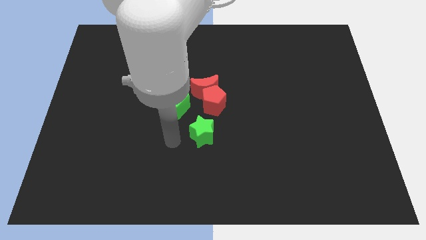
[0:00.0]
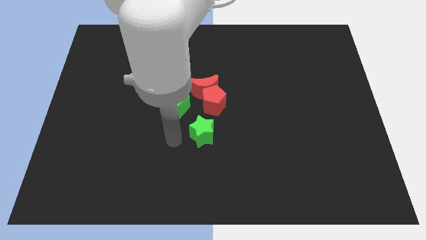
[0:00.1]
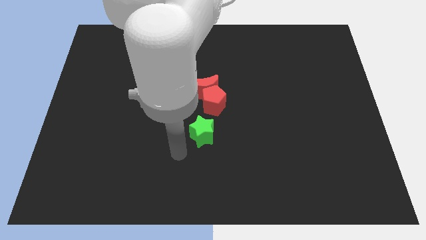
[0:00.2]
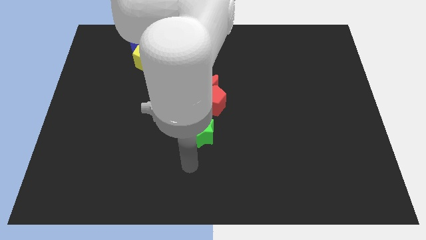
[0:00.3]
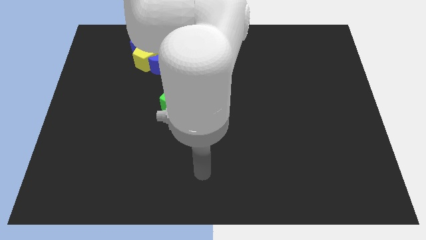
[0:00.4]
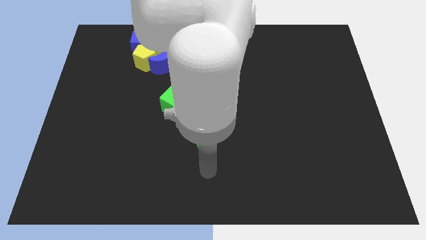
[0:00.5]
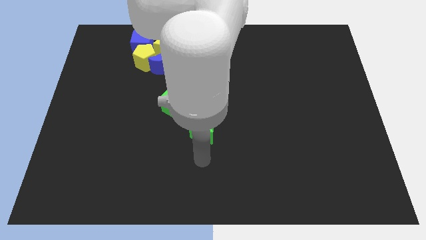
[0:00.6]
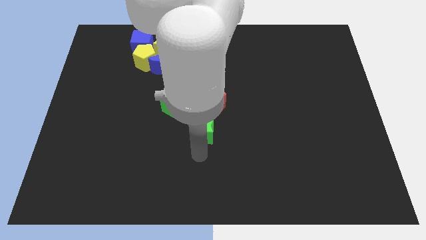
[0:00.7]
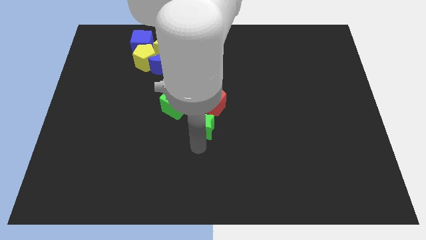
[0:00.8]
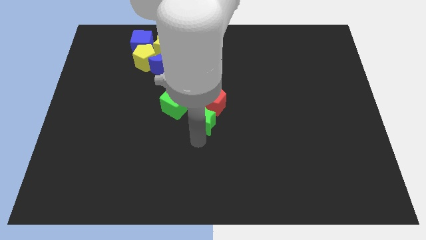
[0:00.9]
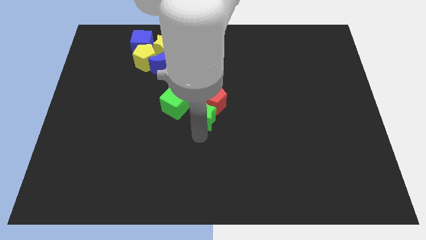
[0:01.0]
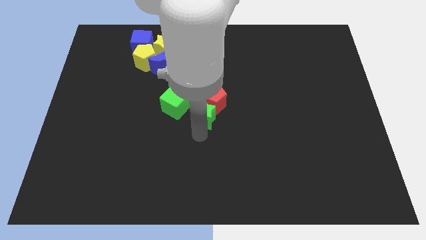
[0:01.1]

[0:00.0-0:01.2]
place the green star below the red pentagon

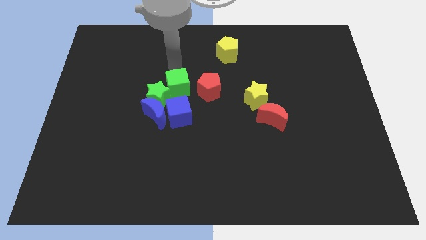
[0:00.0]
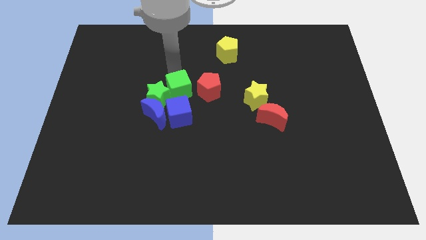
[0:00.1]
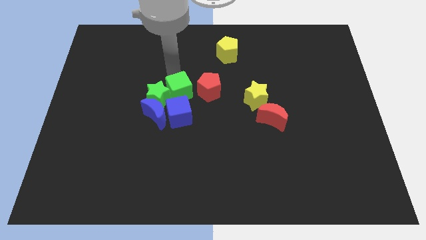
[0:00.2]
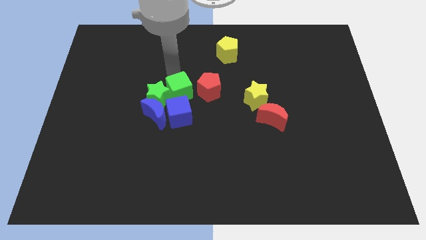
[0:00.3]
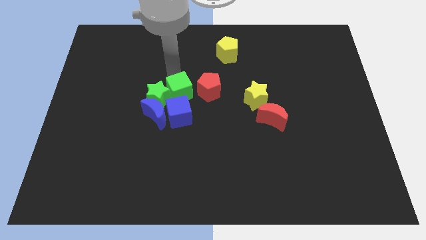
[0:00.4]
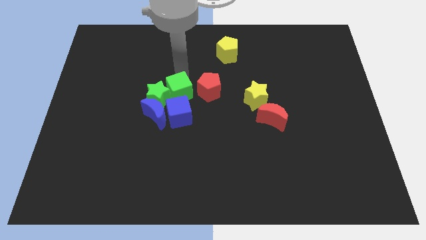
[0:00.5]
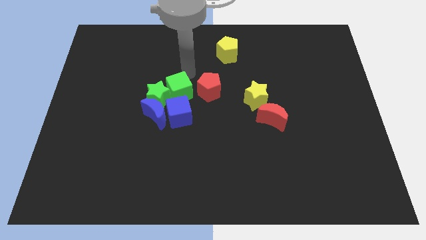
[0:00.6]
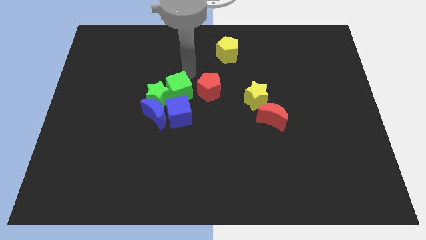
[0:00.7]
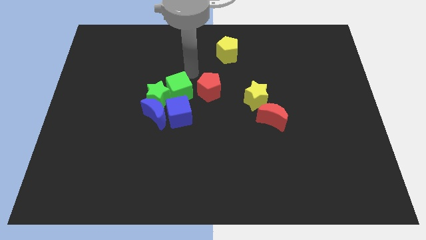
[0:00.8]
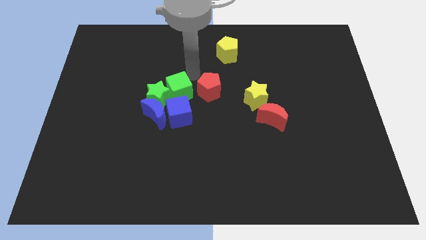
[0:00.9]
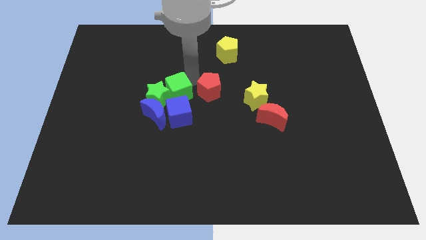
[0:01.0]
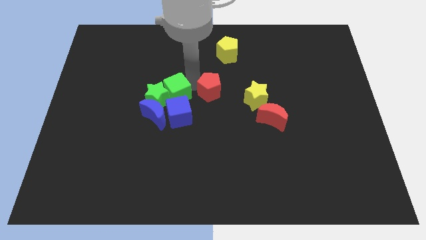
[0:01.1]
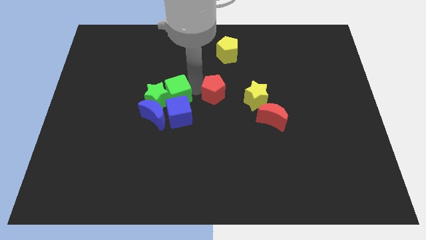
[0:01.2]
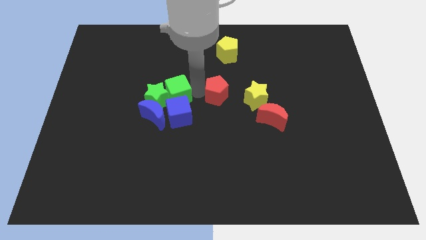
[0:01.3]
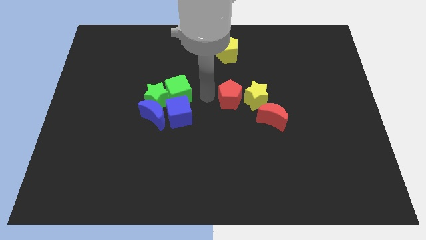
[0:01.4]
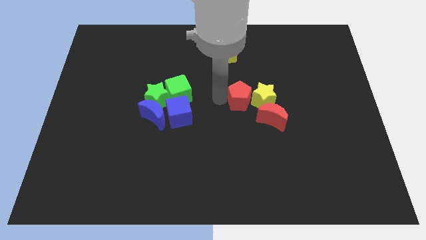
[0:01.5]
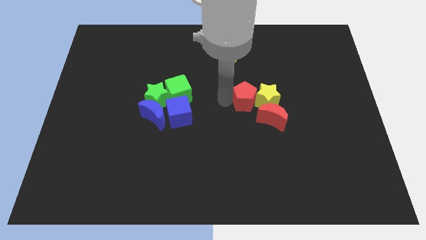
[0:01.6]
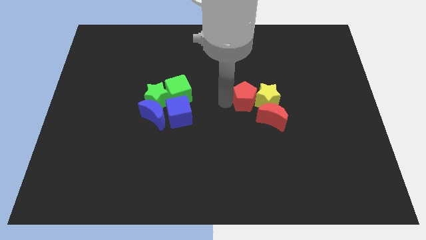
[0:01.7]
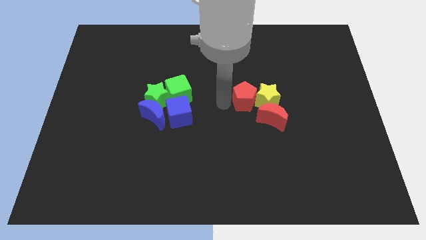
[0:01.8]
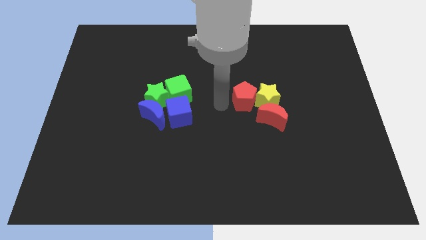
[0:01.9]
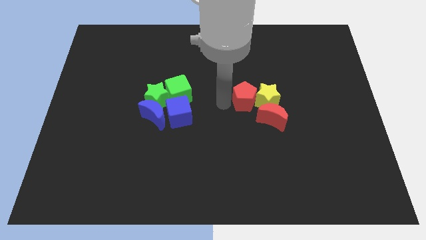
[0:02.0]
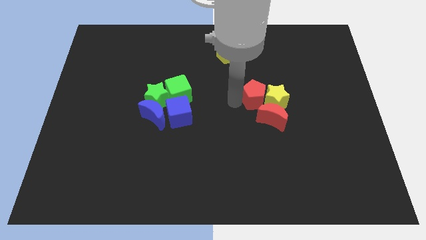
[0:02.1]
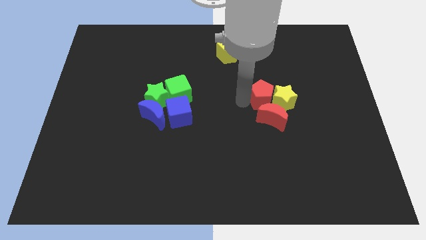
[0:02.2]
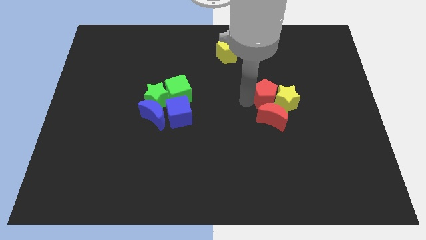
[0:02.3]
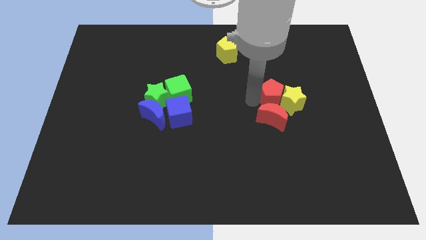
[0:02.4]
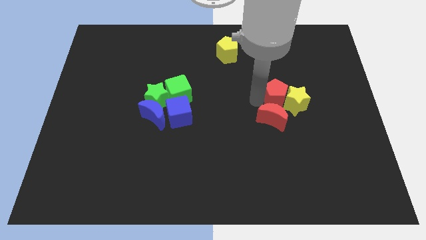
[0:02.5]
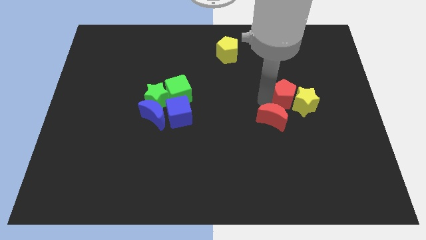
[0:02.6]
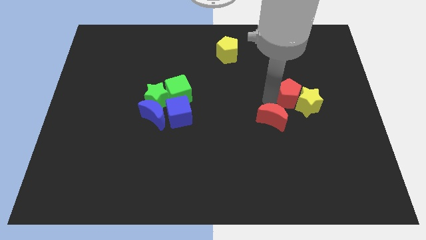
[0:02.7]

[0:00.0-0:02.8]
push the red pentagon and yellow star towards the right side

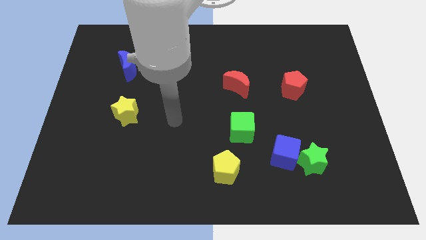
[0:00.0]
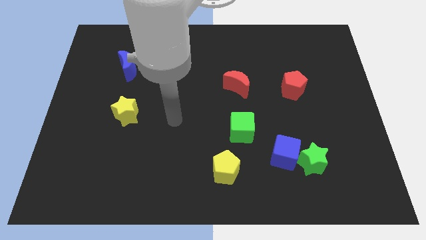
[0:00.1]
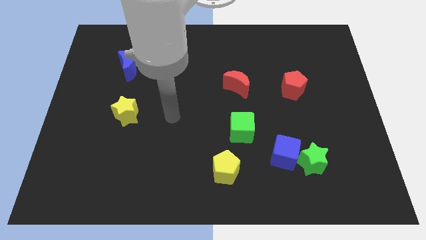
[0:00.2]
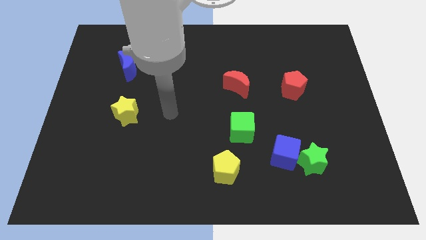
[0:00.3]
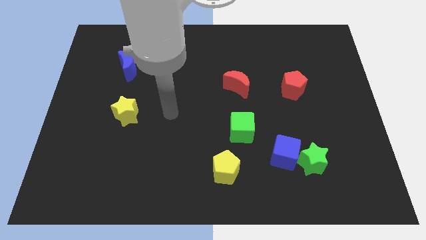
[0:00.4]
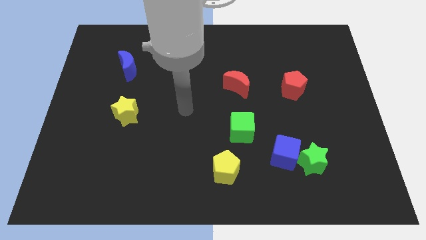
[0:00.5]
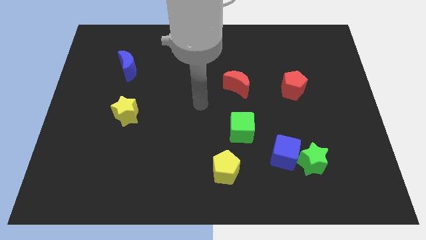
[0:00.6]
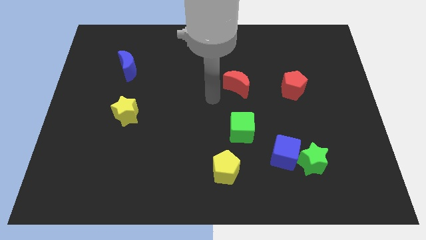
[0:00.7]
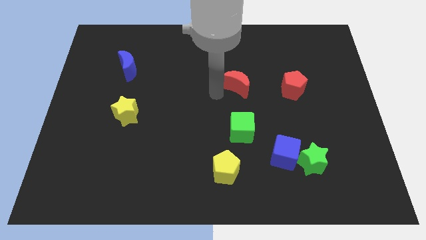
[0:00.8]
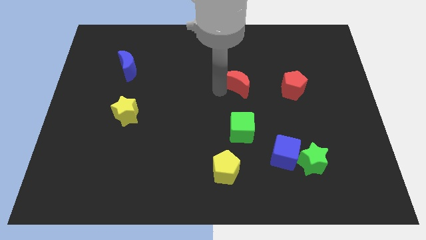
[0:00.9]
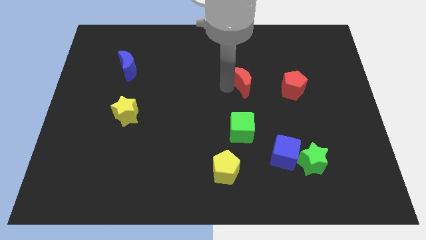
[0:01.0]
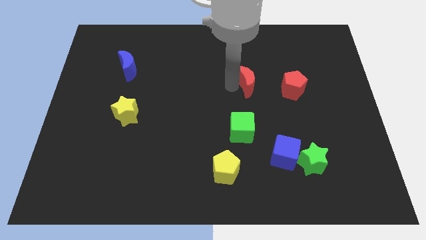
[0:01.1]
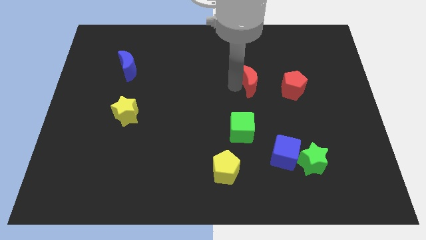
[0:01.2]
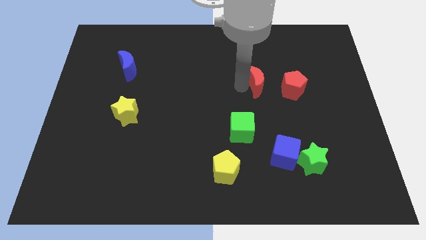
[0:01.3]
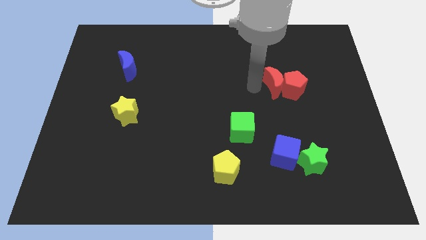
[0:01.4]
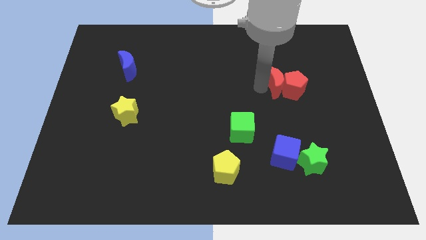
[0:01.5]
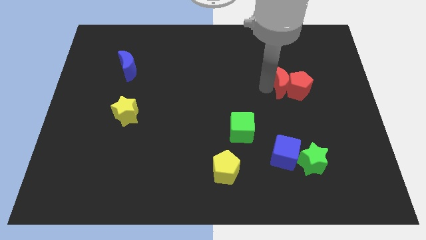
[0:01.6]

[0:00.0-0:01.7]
slide the red moon into the red pentagon

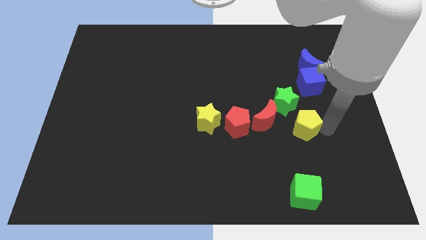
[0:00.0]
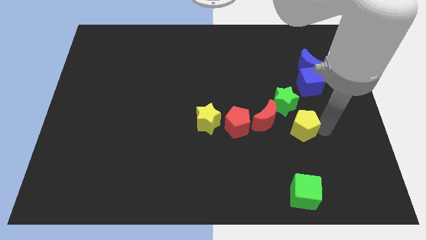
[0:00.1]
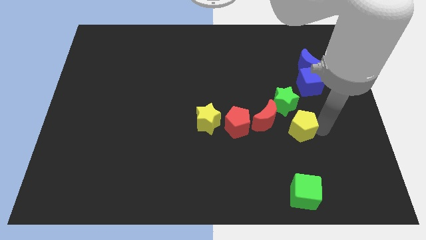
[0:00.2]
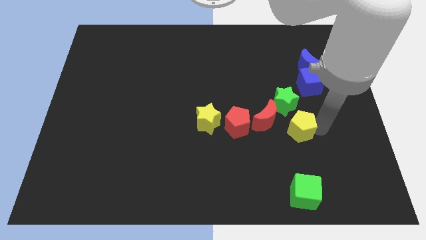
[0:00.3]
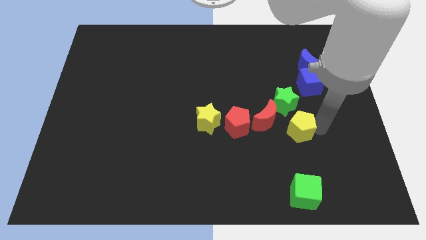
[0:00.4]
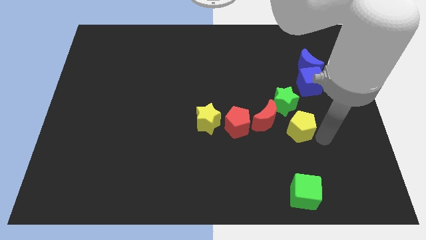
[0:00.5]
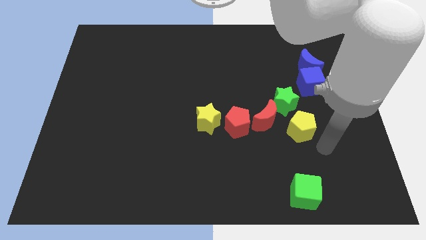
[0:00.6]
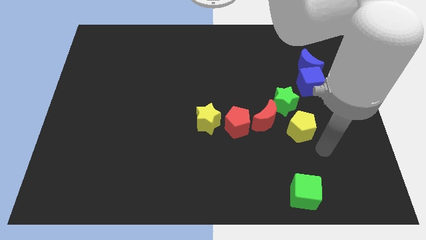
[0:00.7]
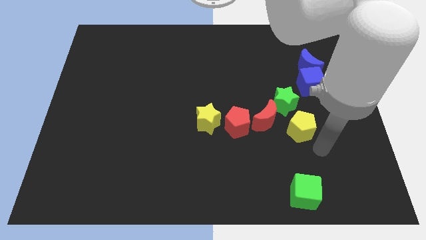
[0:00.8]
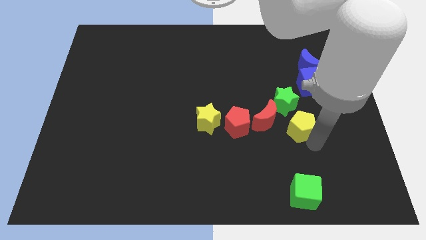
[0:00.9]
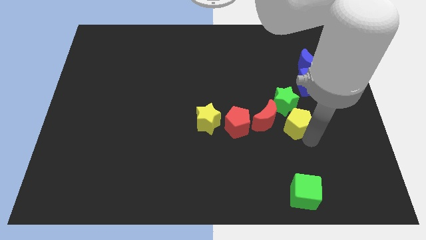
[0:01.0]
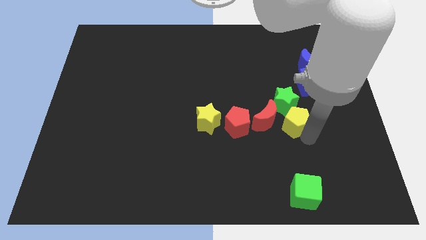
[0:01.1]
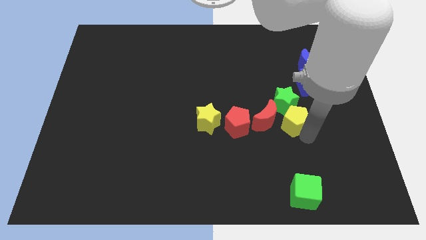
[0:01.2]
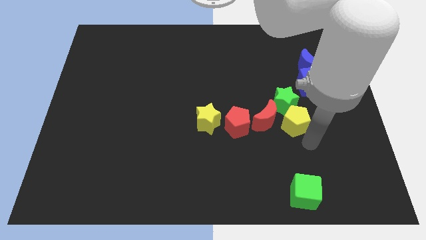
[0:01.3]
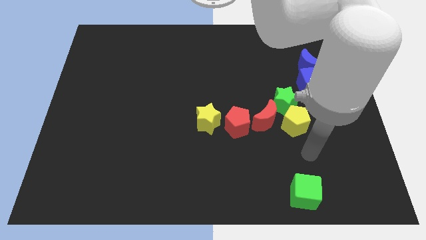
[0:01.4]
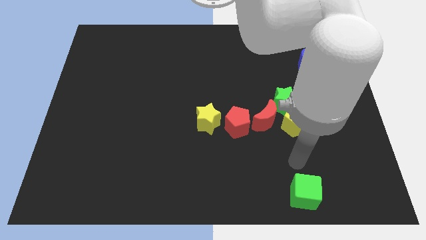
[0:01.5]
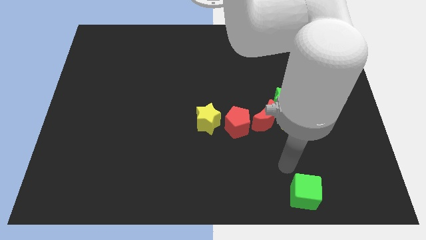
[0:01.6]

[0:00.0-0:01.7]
put the yellow pentagon below the green star

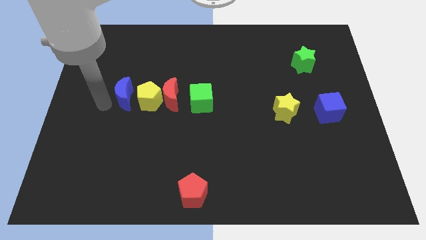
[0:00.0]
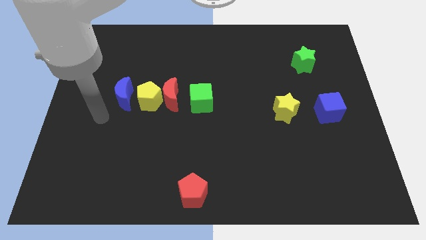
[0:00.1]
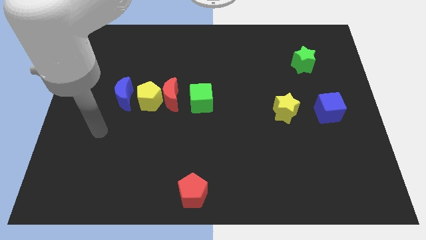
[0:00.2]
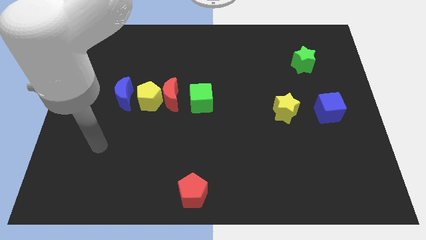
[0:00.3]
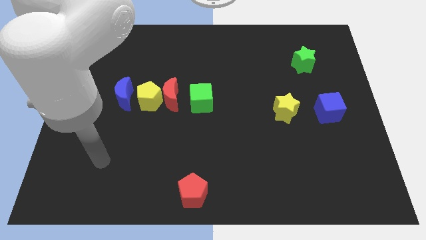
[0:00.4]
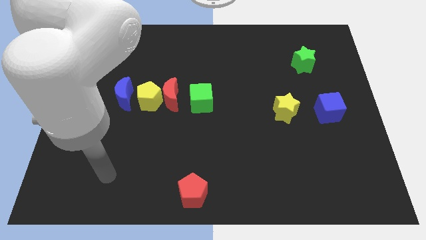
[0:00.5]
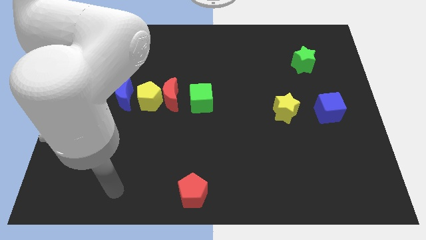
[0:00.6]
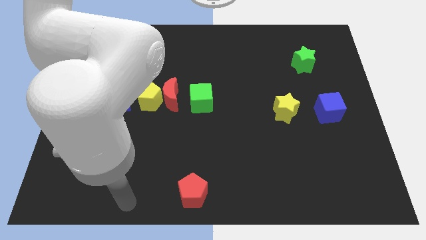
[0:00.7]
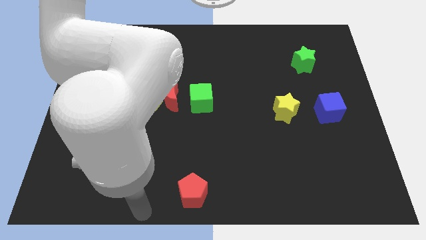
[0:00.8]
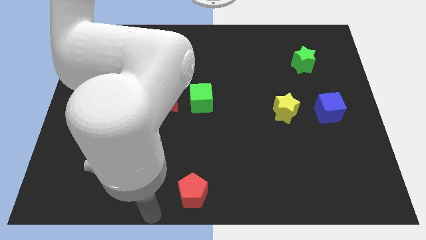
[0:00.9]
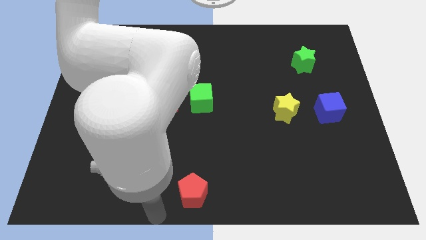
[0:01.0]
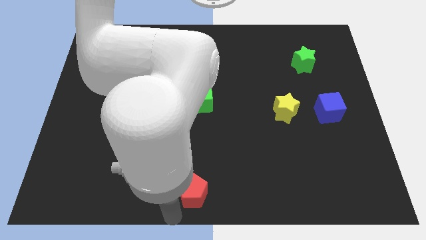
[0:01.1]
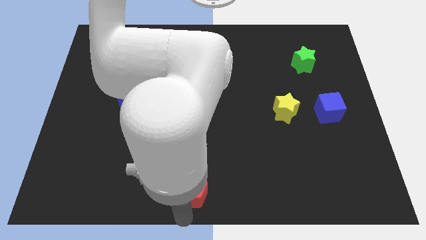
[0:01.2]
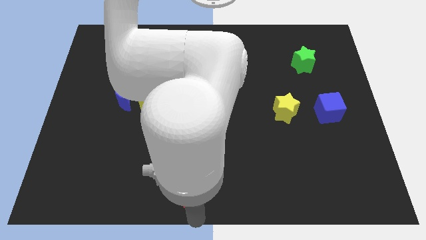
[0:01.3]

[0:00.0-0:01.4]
move your arm to the bottom of the red pentagon
